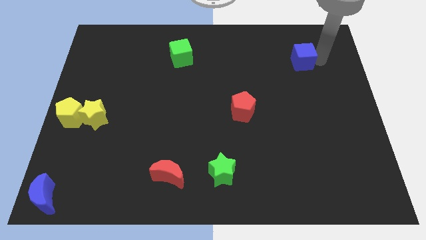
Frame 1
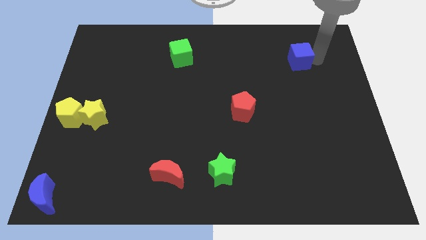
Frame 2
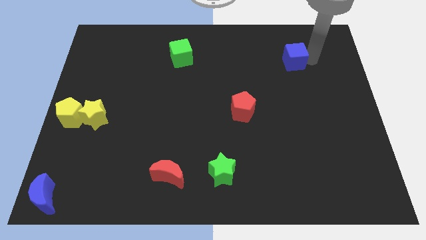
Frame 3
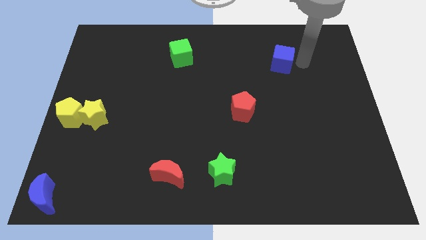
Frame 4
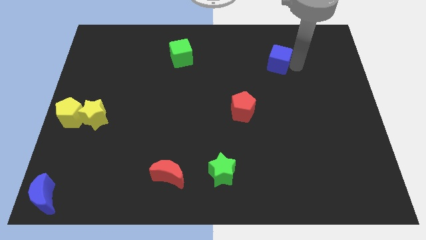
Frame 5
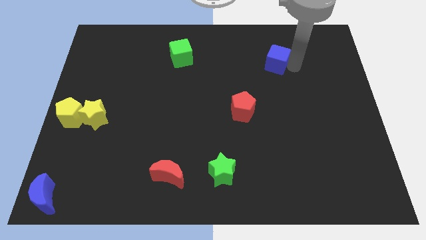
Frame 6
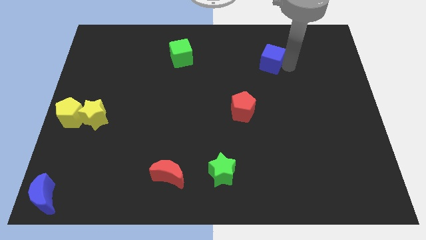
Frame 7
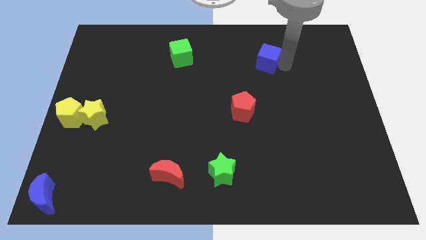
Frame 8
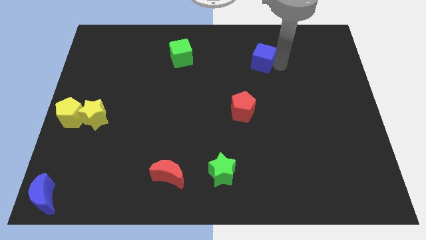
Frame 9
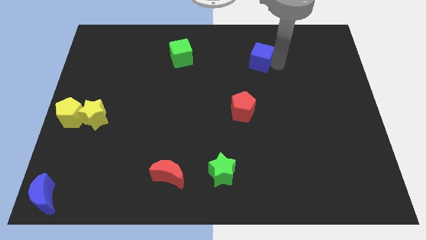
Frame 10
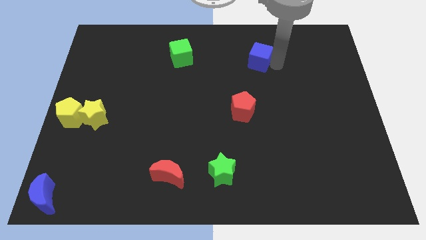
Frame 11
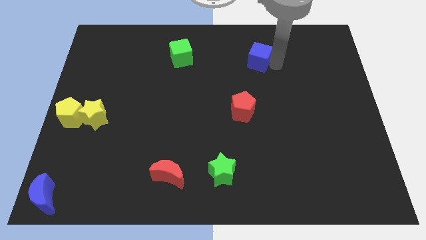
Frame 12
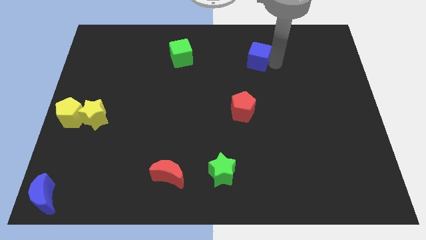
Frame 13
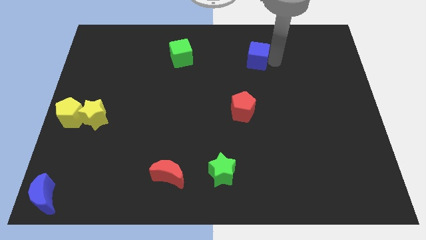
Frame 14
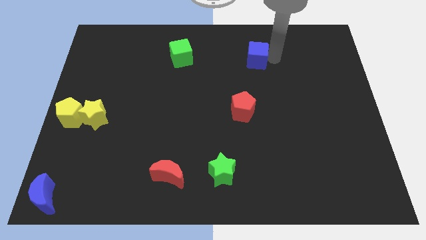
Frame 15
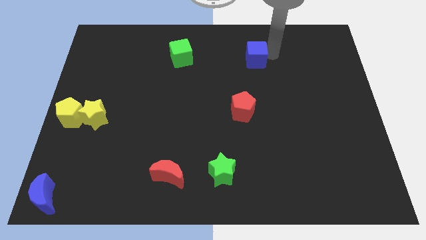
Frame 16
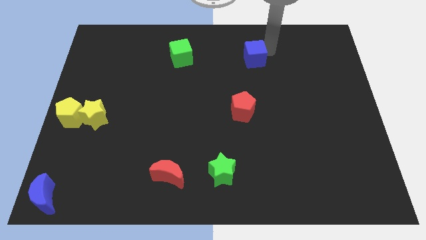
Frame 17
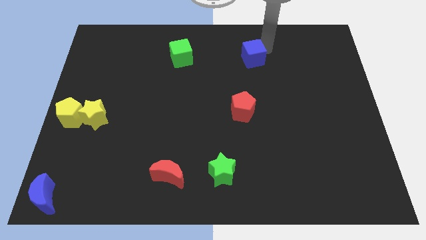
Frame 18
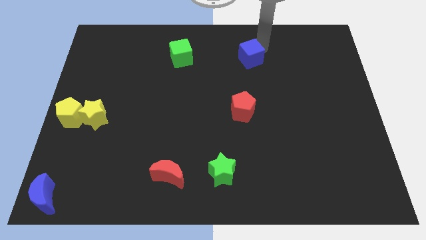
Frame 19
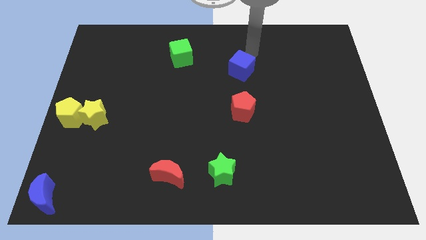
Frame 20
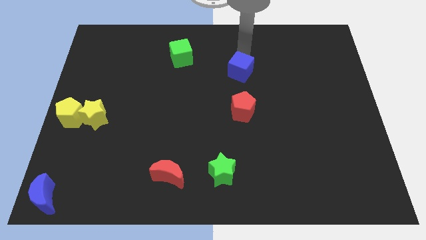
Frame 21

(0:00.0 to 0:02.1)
place the blue cube on top of red pentagon

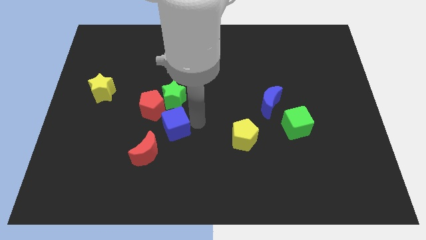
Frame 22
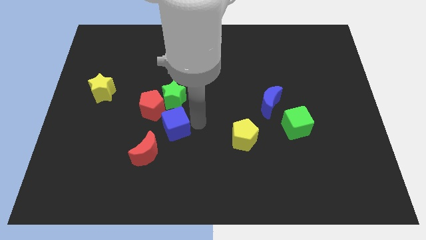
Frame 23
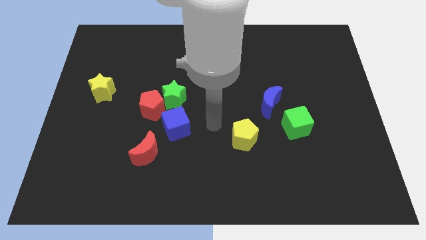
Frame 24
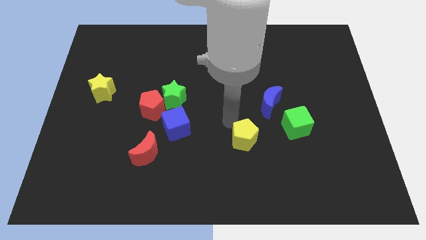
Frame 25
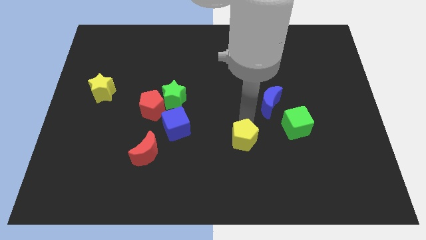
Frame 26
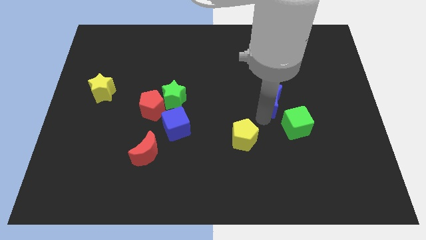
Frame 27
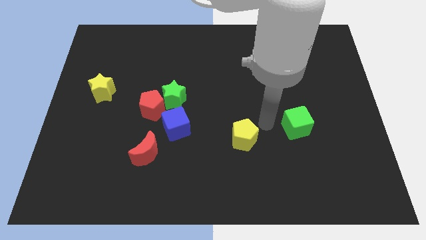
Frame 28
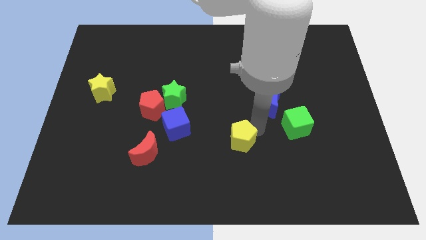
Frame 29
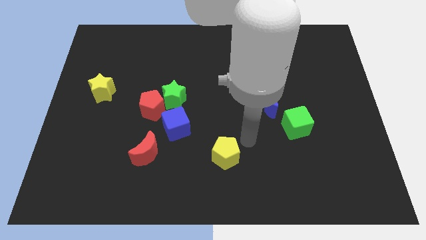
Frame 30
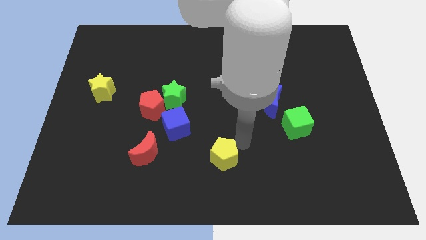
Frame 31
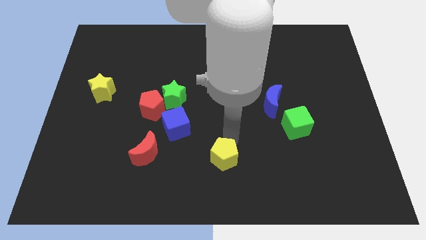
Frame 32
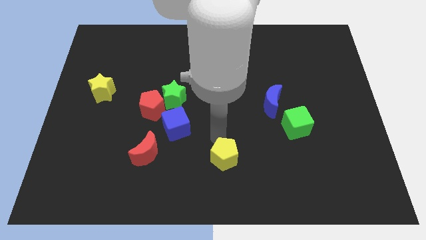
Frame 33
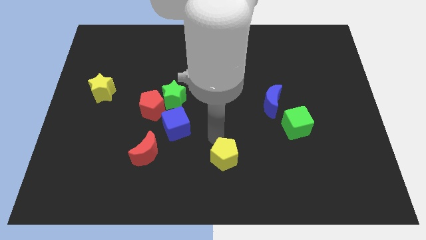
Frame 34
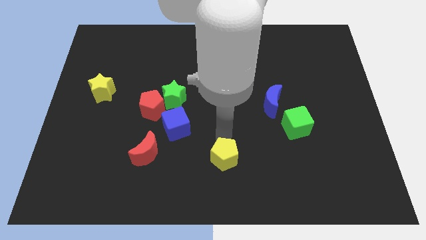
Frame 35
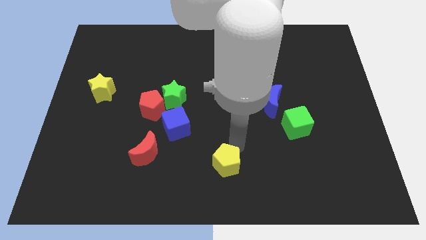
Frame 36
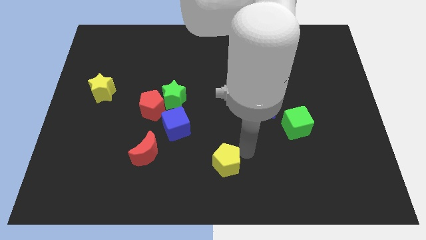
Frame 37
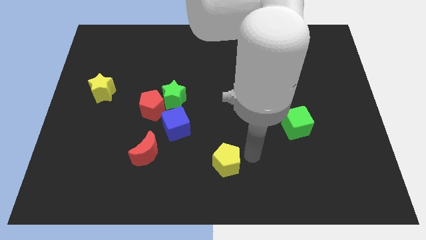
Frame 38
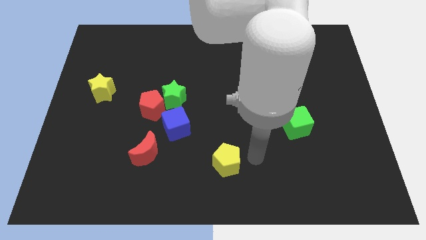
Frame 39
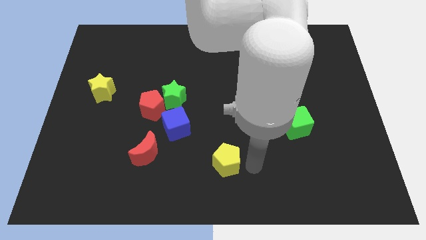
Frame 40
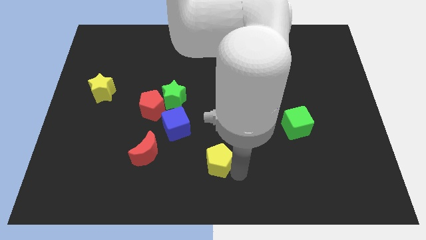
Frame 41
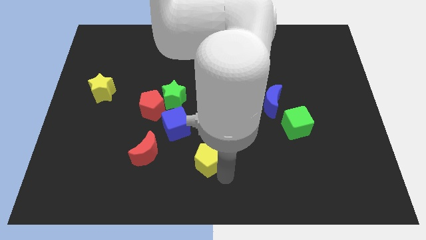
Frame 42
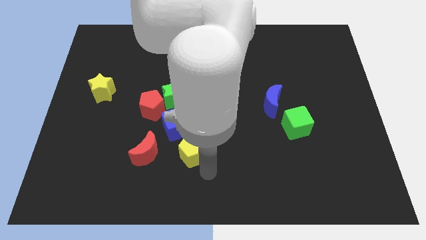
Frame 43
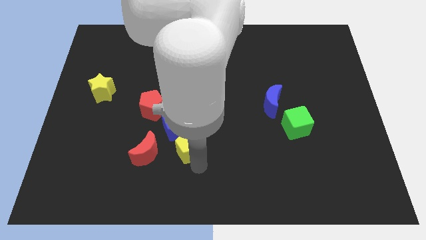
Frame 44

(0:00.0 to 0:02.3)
move the yellow pentagon into the blue cube

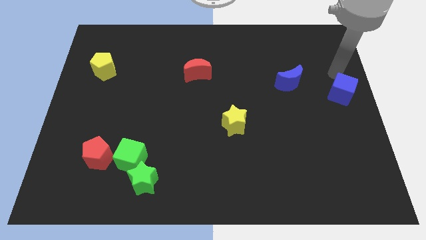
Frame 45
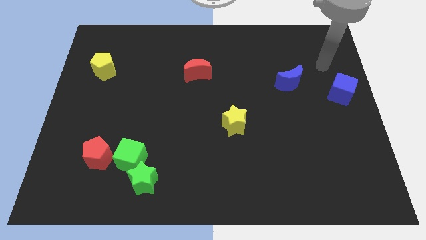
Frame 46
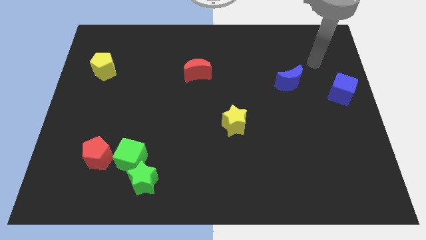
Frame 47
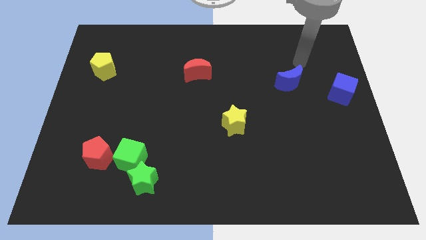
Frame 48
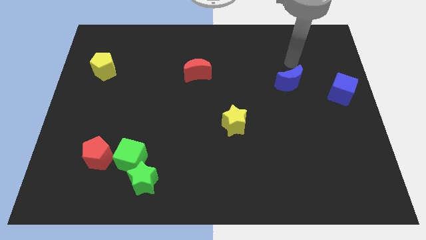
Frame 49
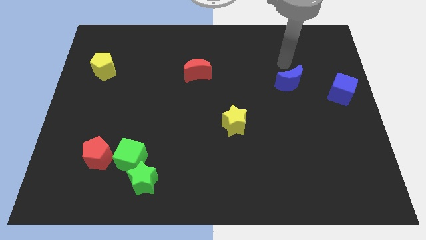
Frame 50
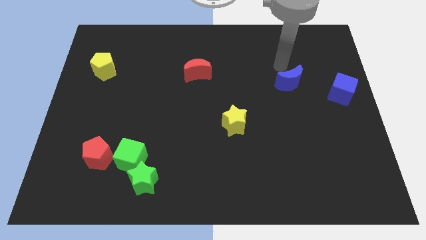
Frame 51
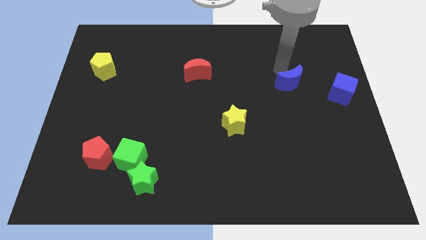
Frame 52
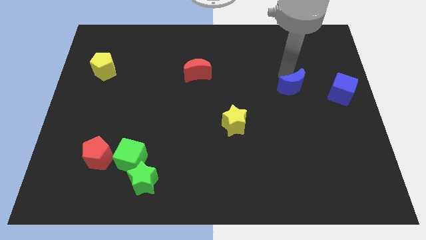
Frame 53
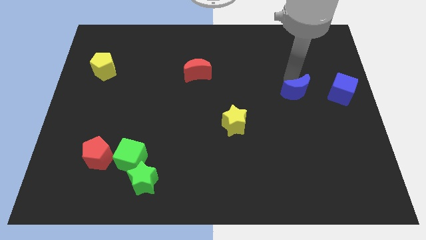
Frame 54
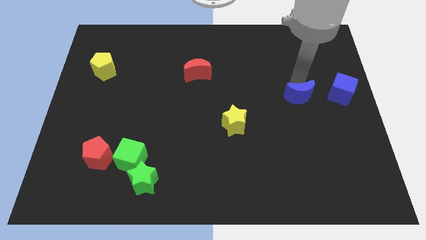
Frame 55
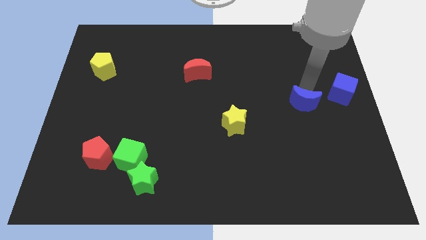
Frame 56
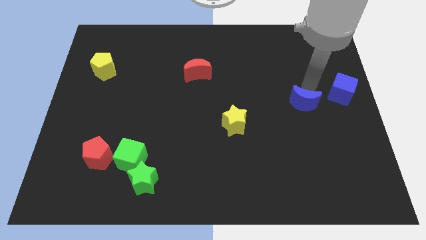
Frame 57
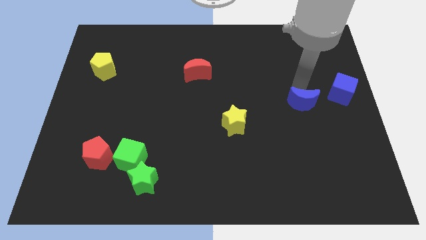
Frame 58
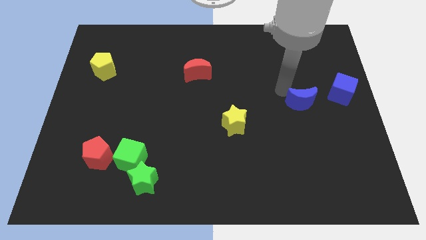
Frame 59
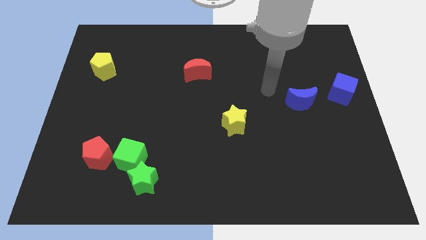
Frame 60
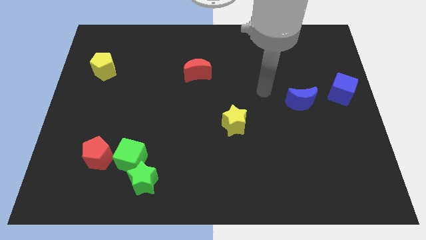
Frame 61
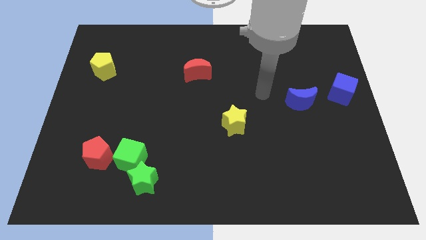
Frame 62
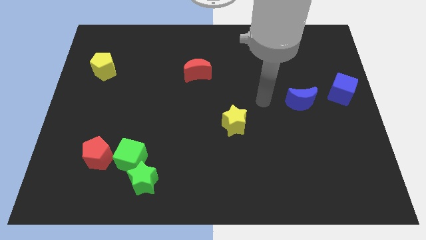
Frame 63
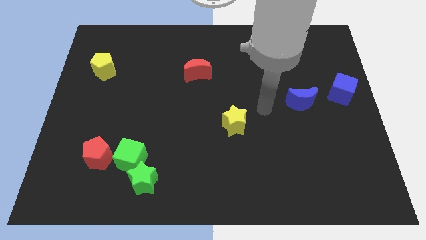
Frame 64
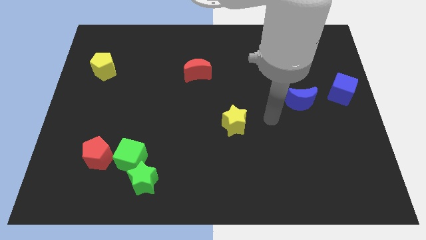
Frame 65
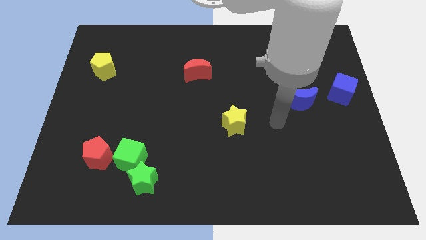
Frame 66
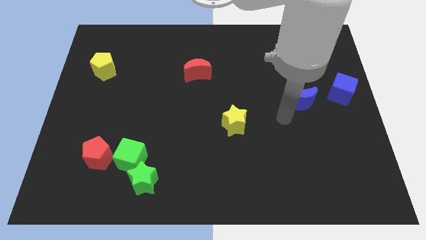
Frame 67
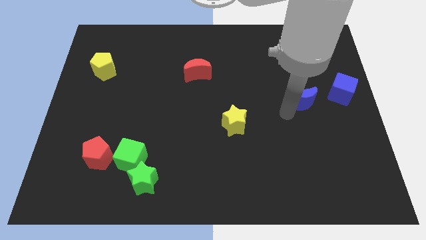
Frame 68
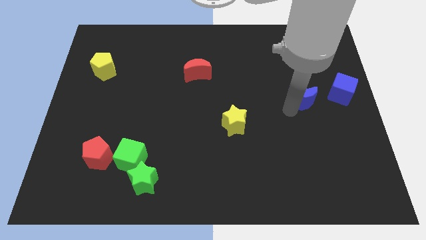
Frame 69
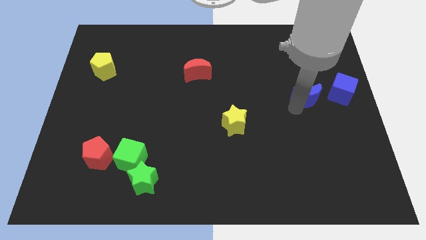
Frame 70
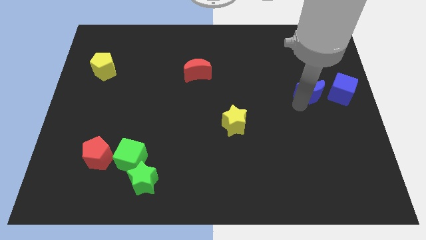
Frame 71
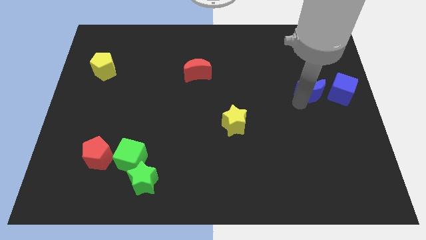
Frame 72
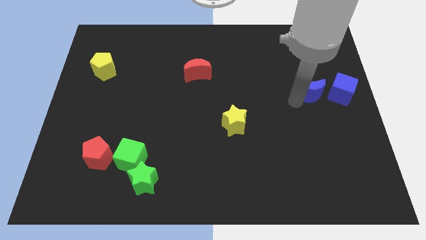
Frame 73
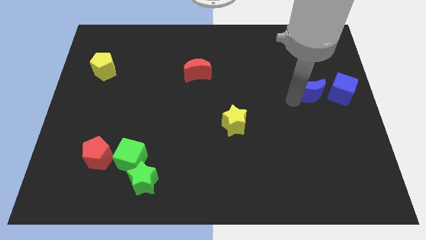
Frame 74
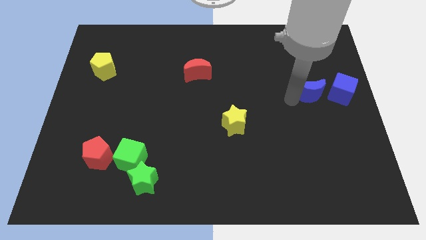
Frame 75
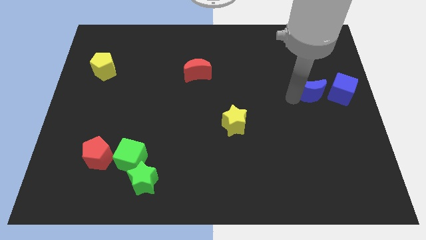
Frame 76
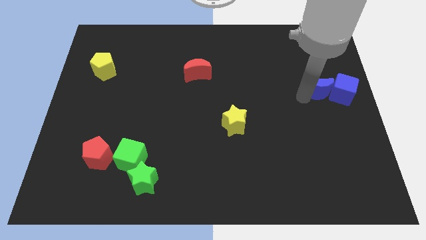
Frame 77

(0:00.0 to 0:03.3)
push the blue moon into the blue cube

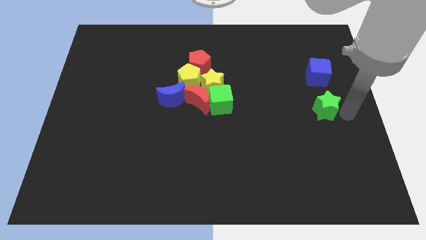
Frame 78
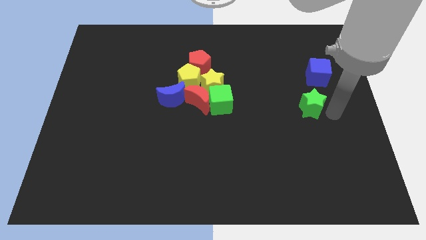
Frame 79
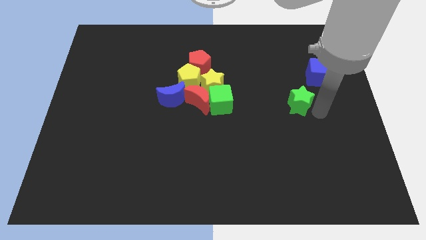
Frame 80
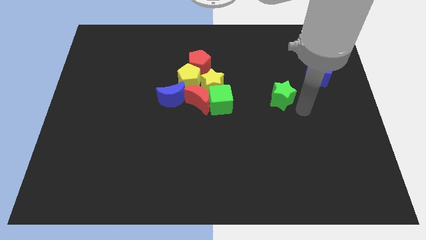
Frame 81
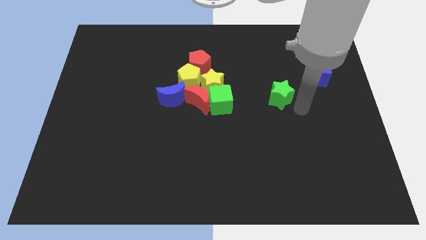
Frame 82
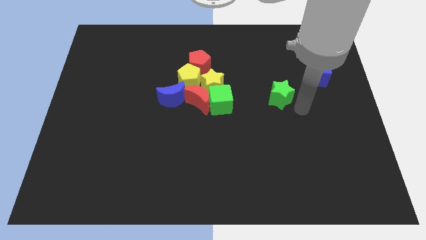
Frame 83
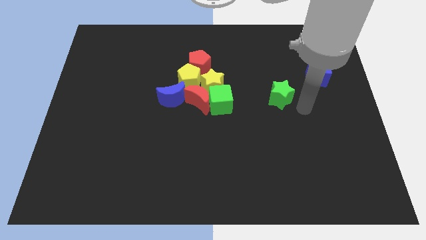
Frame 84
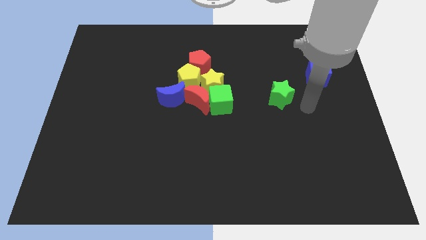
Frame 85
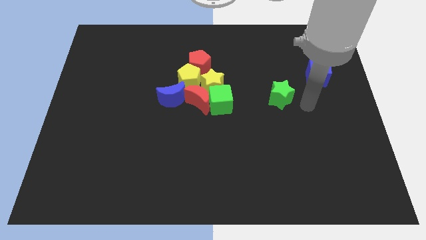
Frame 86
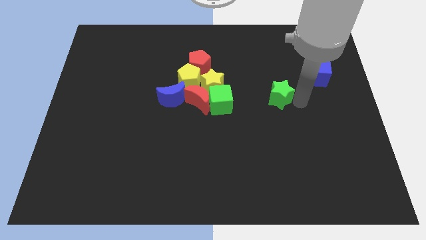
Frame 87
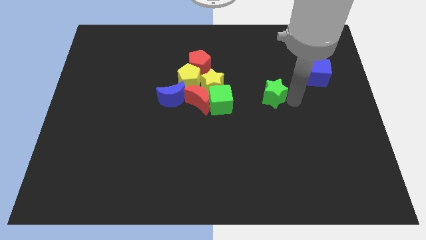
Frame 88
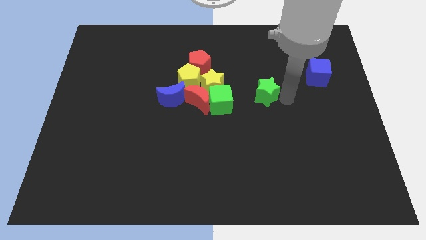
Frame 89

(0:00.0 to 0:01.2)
place the green star between green cube and blue cube

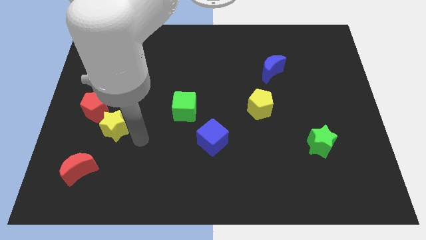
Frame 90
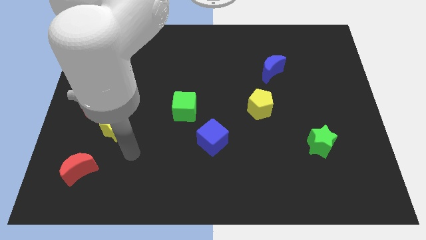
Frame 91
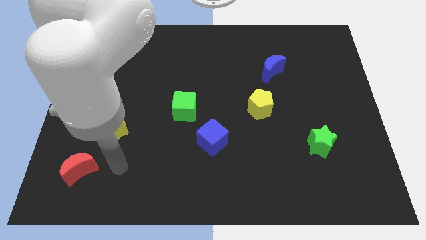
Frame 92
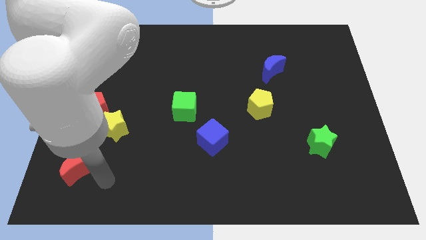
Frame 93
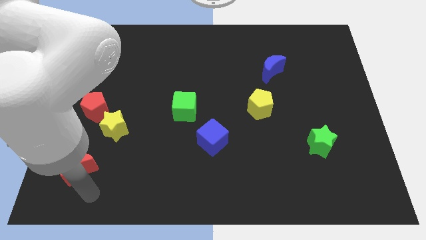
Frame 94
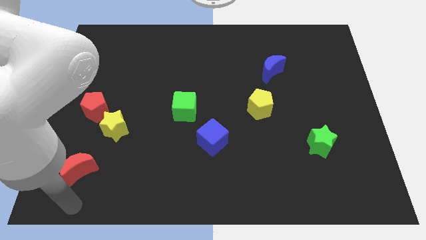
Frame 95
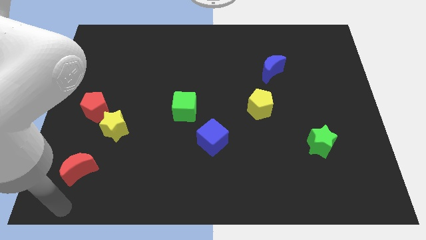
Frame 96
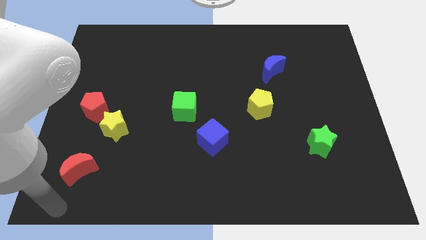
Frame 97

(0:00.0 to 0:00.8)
point your arm at the bottom of the red crescent
